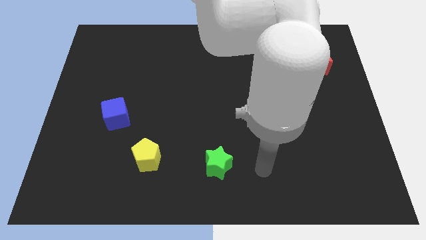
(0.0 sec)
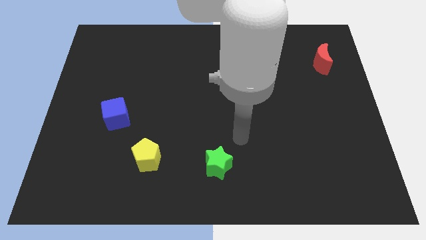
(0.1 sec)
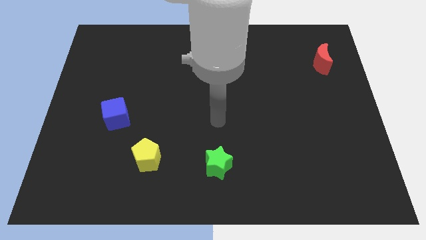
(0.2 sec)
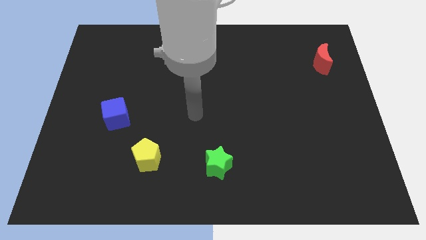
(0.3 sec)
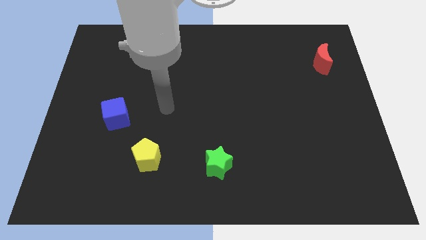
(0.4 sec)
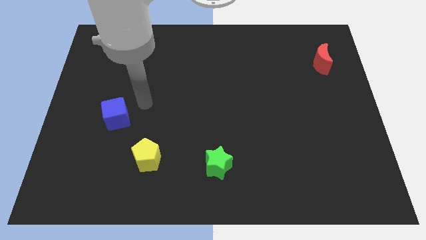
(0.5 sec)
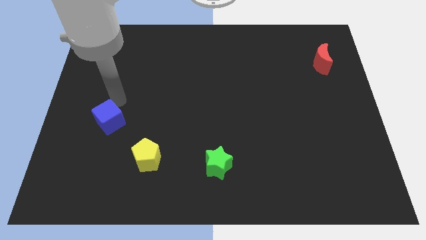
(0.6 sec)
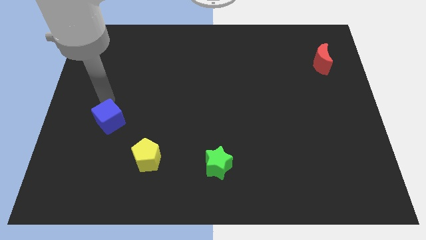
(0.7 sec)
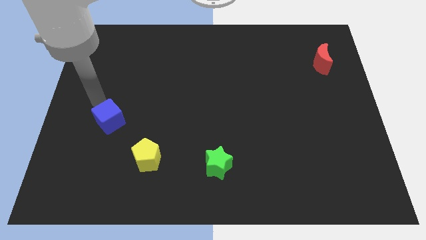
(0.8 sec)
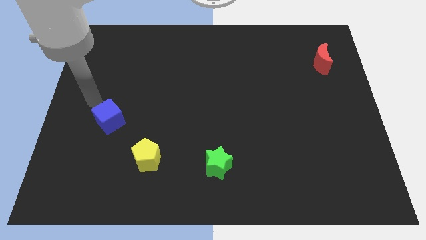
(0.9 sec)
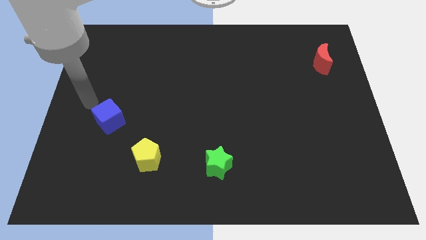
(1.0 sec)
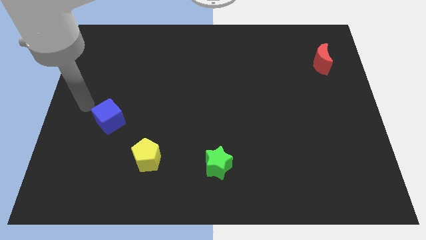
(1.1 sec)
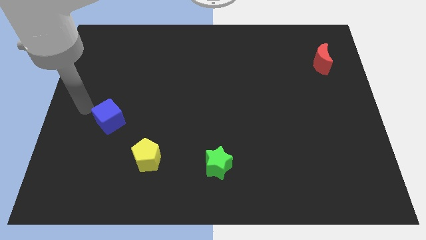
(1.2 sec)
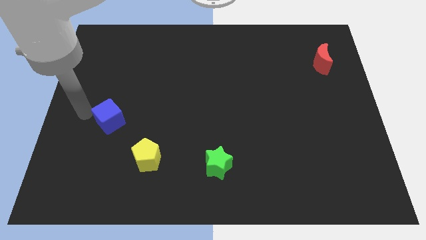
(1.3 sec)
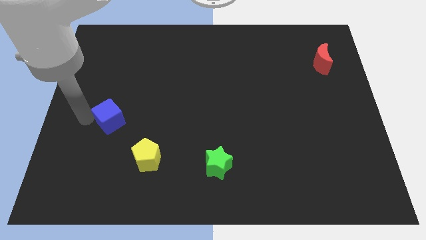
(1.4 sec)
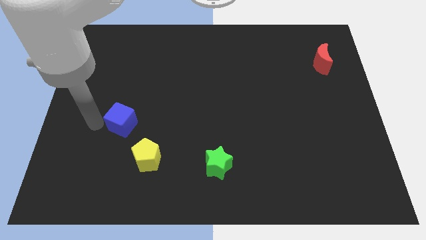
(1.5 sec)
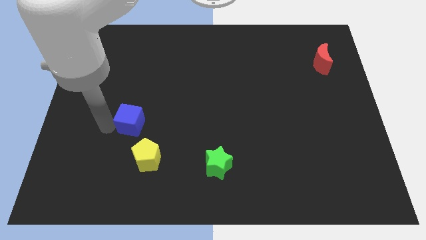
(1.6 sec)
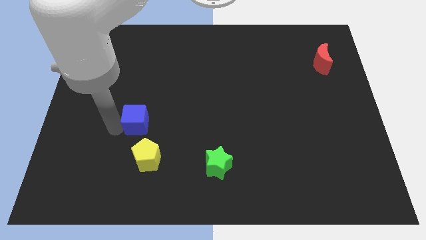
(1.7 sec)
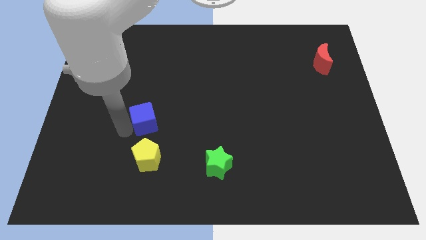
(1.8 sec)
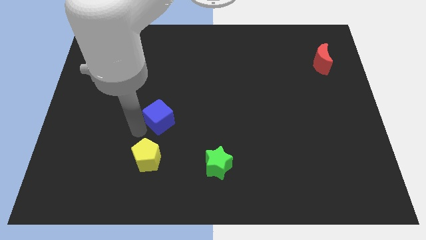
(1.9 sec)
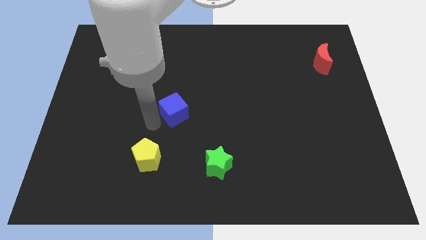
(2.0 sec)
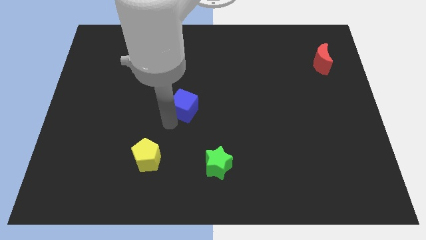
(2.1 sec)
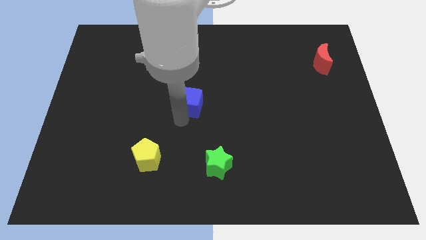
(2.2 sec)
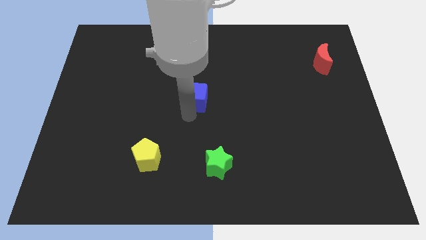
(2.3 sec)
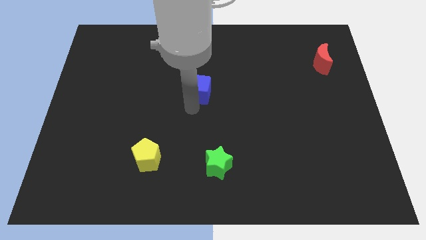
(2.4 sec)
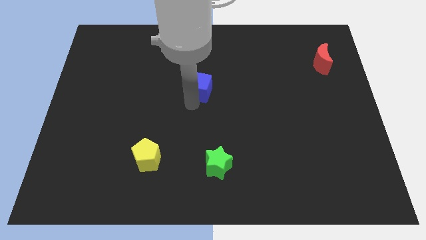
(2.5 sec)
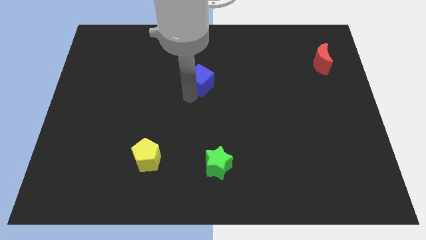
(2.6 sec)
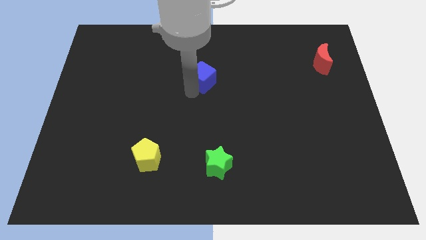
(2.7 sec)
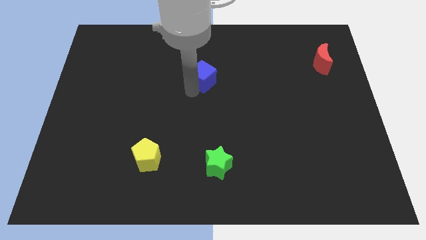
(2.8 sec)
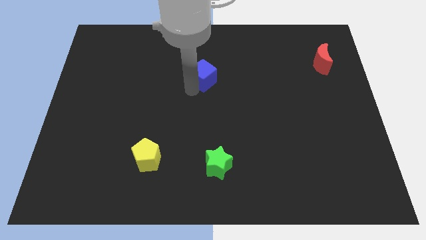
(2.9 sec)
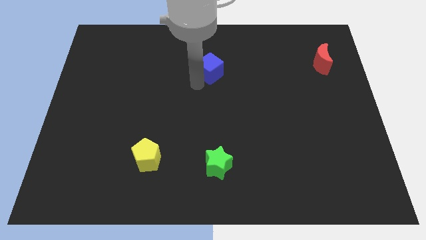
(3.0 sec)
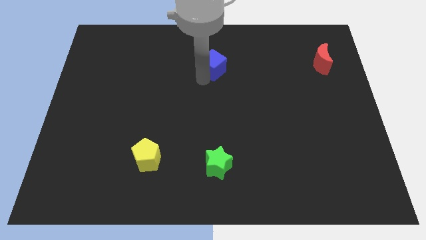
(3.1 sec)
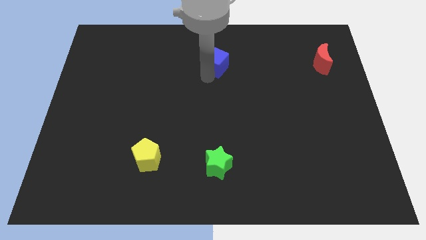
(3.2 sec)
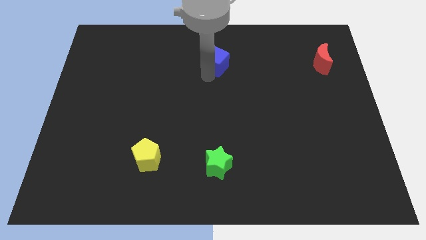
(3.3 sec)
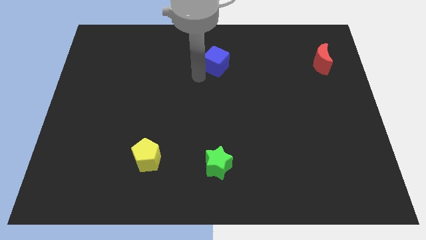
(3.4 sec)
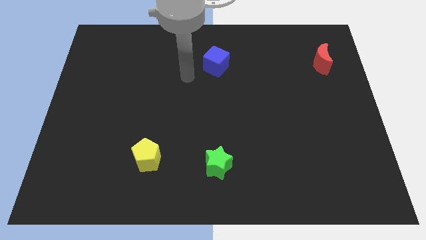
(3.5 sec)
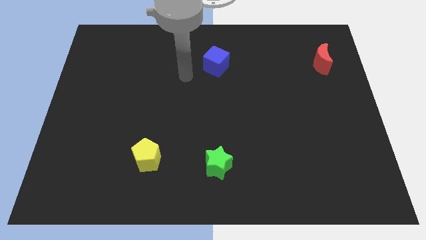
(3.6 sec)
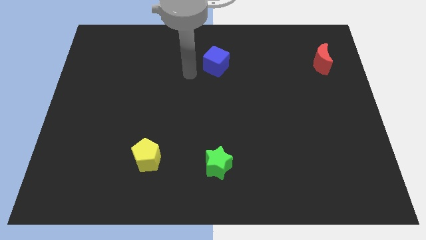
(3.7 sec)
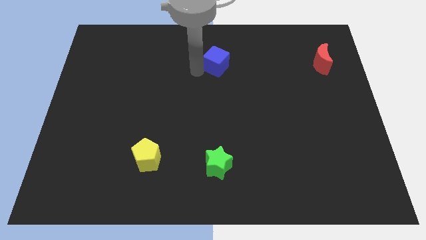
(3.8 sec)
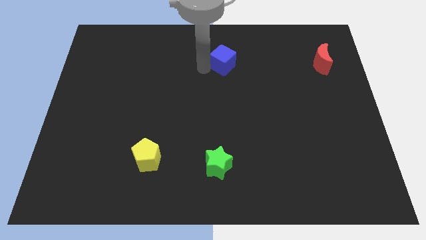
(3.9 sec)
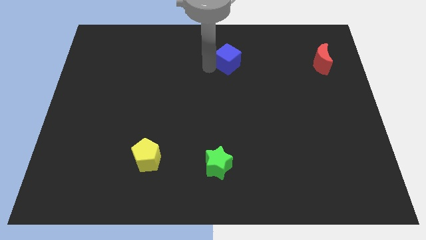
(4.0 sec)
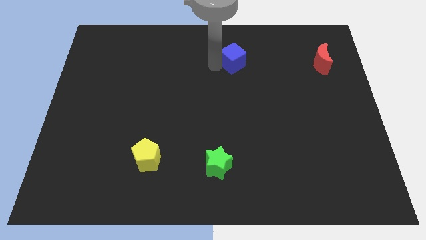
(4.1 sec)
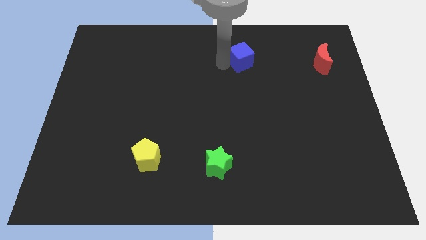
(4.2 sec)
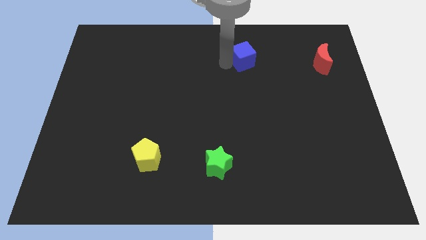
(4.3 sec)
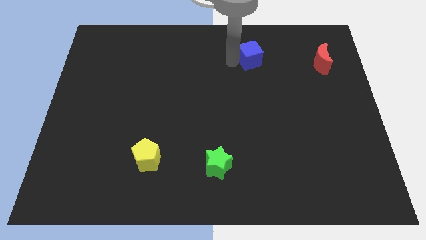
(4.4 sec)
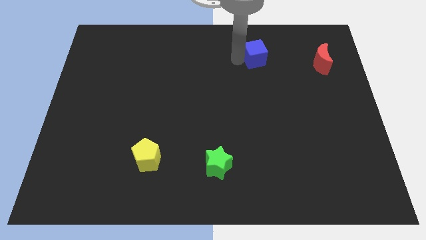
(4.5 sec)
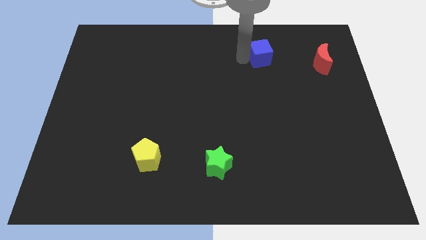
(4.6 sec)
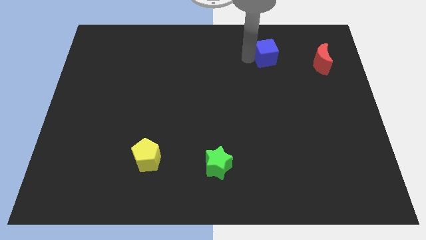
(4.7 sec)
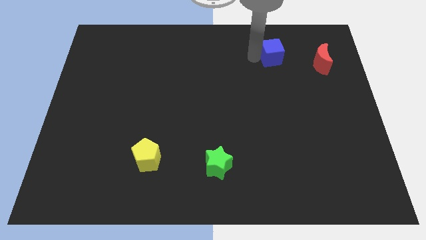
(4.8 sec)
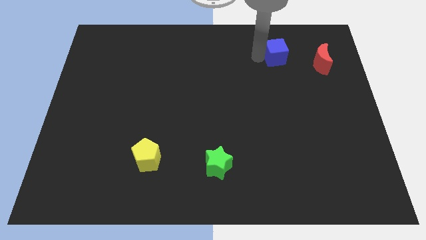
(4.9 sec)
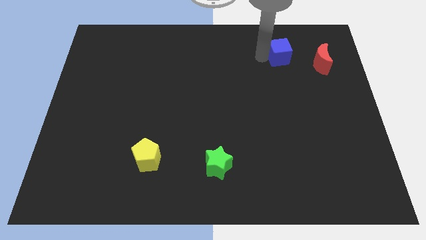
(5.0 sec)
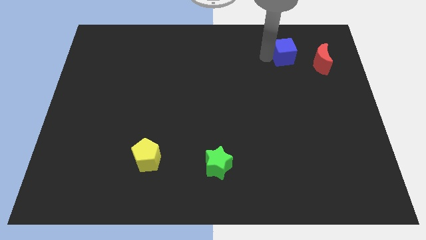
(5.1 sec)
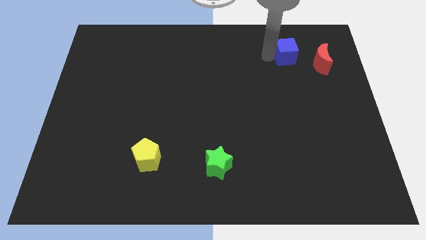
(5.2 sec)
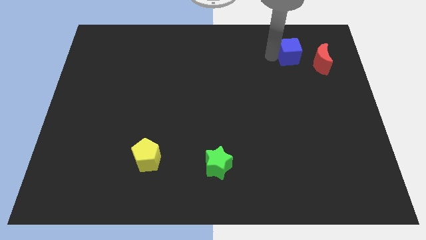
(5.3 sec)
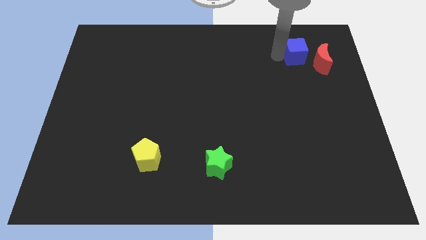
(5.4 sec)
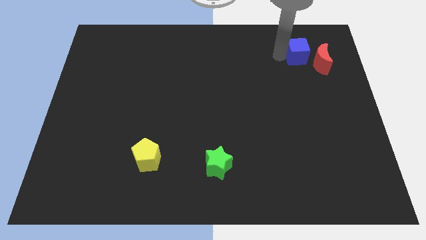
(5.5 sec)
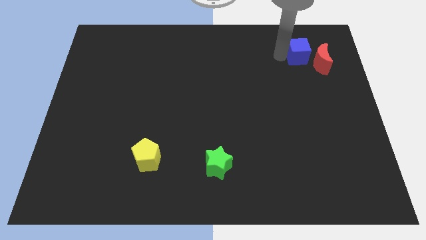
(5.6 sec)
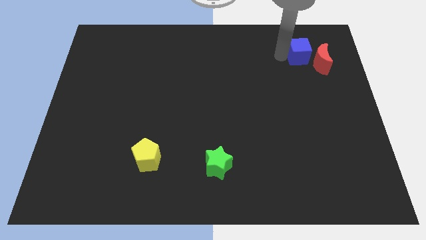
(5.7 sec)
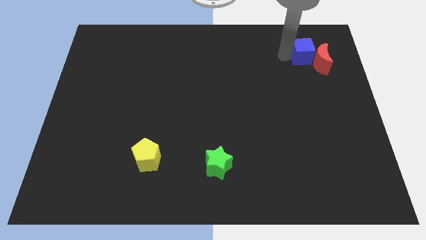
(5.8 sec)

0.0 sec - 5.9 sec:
put the blue block towards the red block

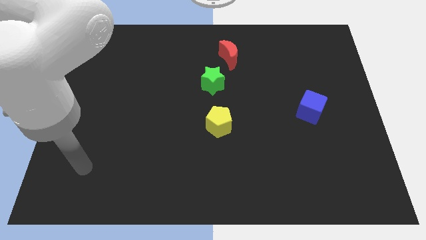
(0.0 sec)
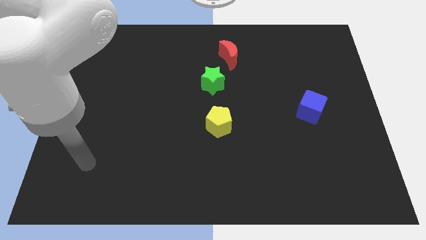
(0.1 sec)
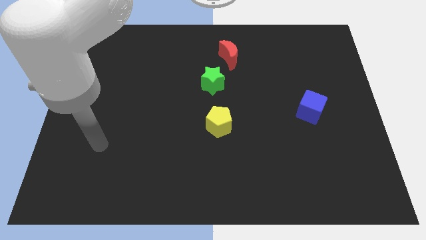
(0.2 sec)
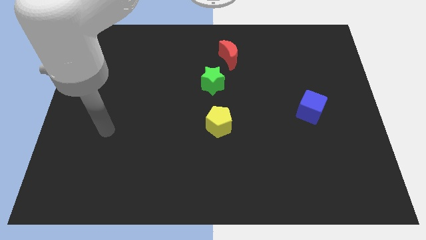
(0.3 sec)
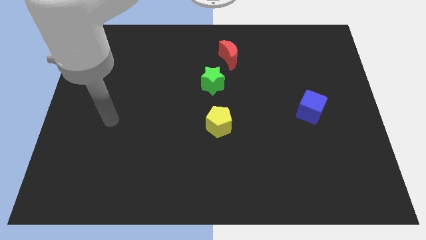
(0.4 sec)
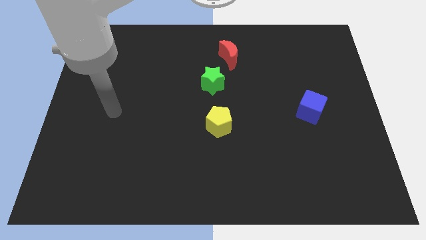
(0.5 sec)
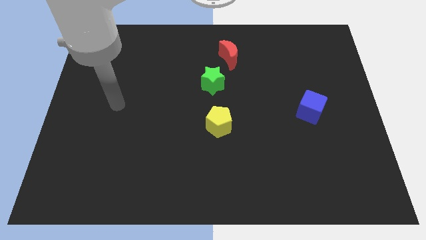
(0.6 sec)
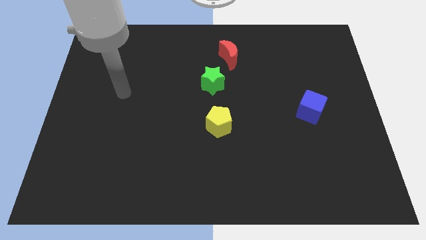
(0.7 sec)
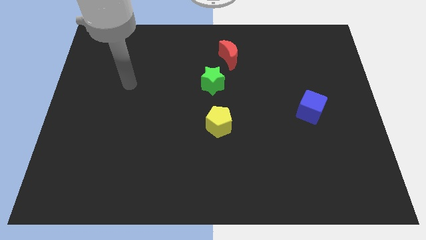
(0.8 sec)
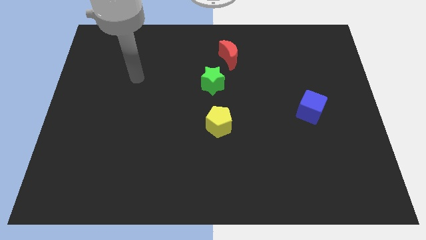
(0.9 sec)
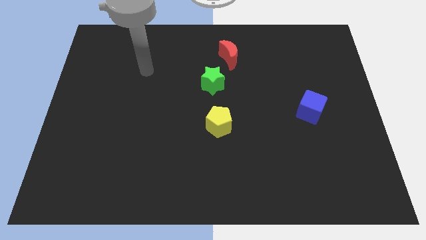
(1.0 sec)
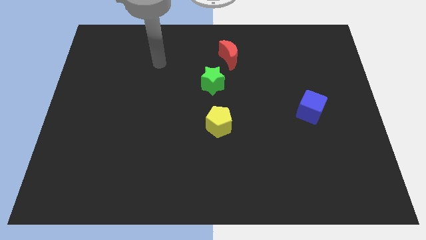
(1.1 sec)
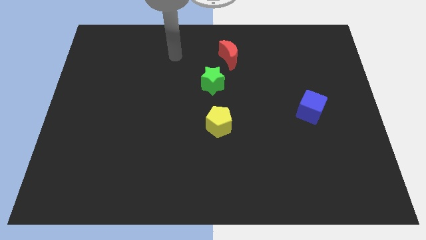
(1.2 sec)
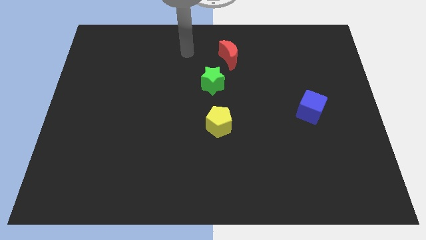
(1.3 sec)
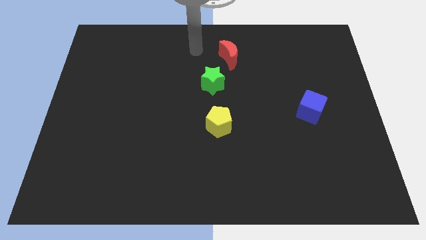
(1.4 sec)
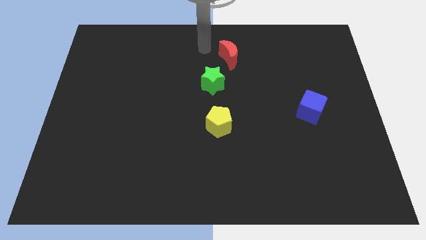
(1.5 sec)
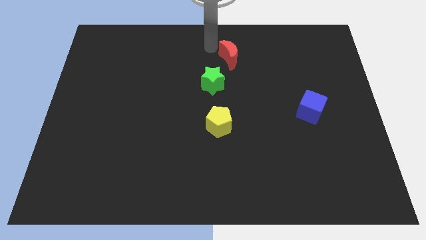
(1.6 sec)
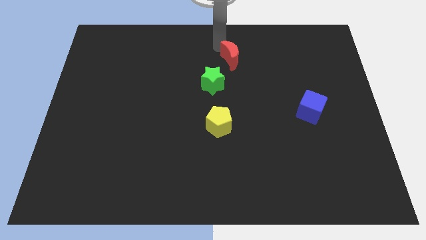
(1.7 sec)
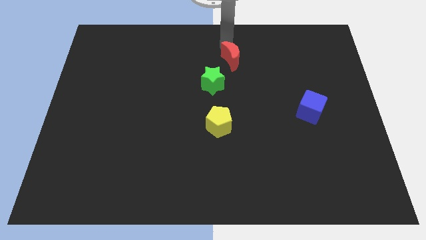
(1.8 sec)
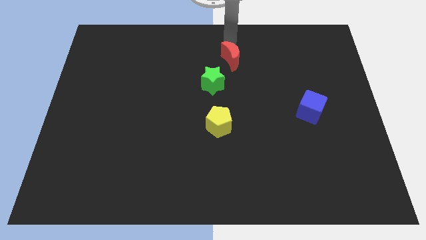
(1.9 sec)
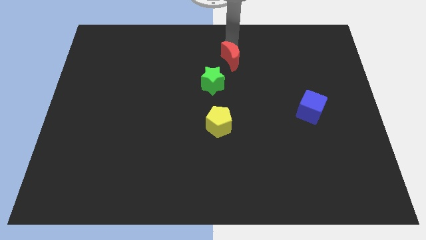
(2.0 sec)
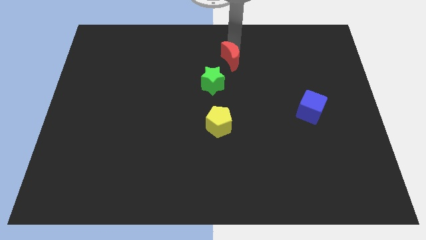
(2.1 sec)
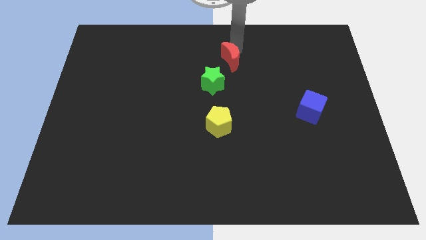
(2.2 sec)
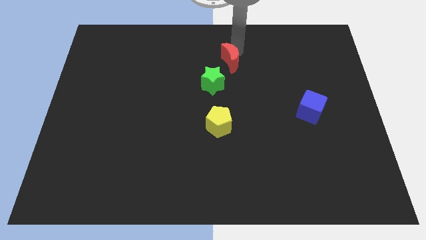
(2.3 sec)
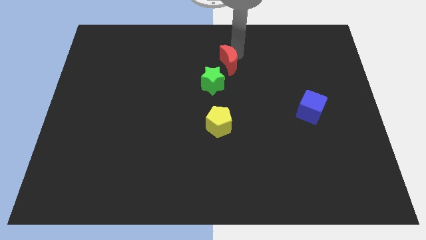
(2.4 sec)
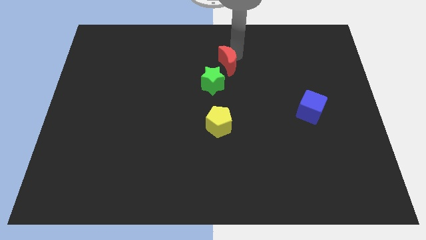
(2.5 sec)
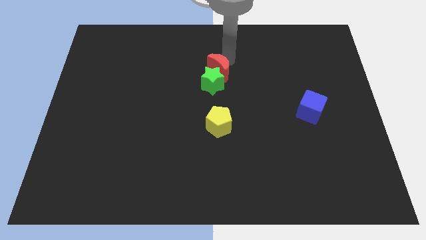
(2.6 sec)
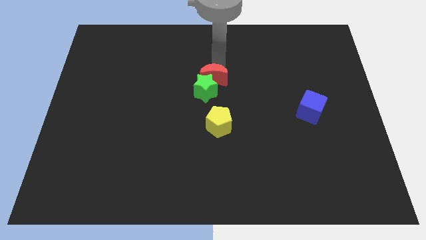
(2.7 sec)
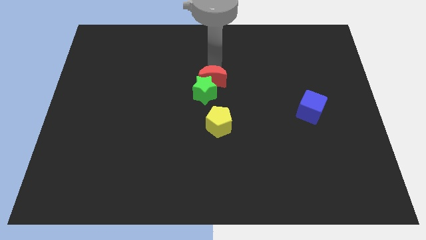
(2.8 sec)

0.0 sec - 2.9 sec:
put the red block close to the green star
